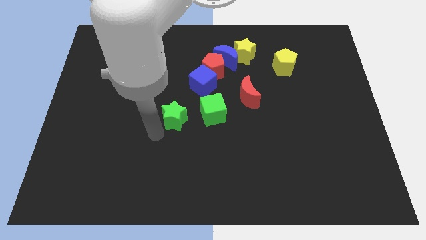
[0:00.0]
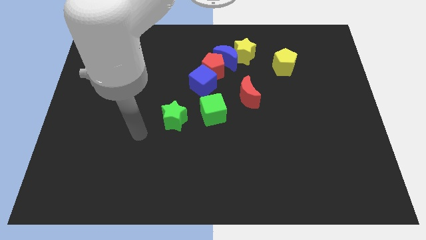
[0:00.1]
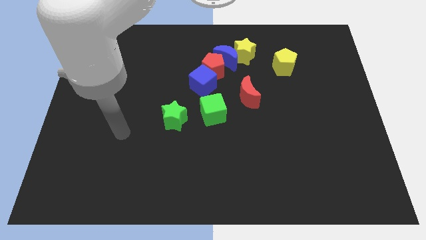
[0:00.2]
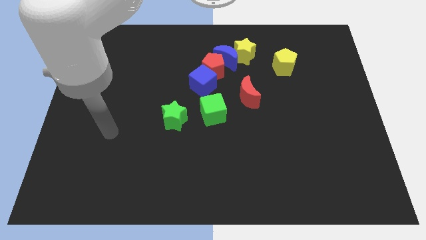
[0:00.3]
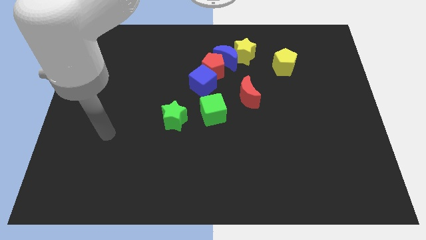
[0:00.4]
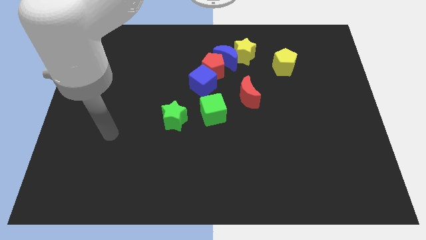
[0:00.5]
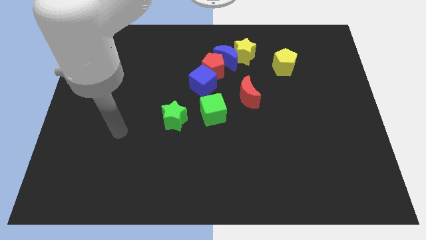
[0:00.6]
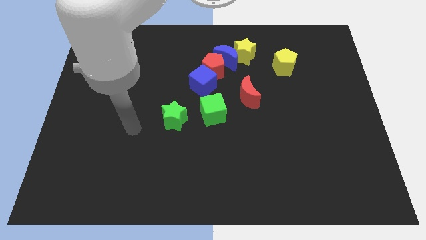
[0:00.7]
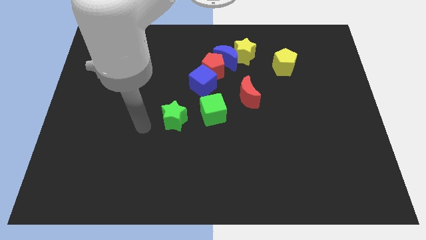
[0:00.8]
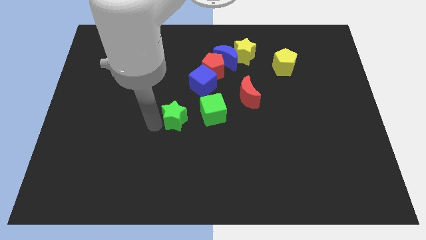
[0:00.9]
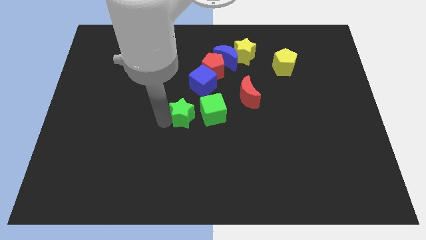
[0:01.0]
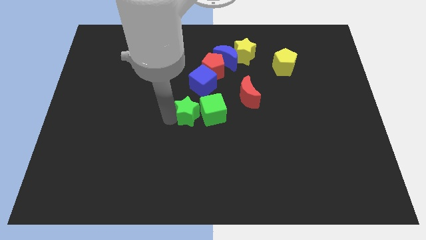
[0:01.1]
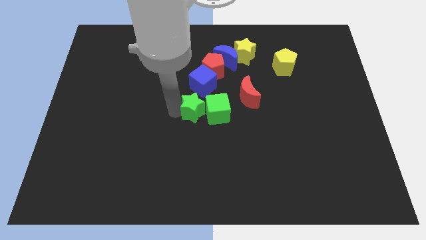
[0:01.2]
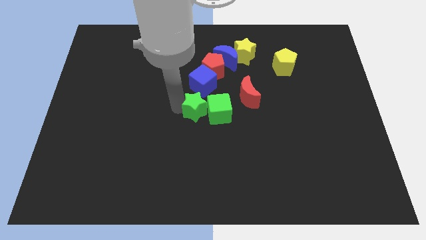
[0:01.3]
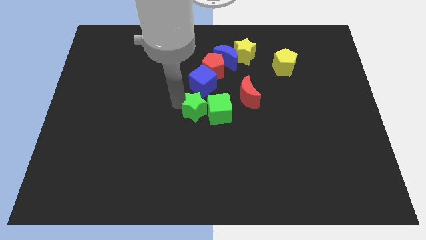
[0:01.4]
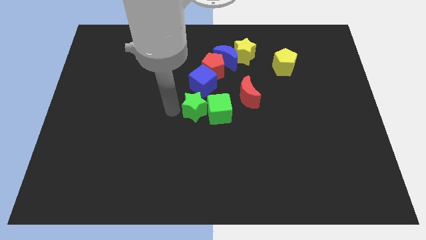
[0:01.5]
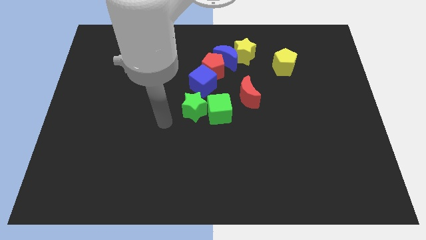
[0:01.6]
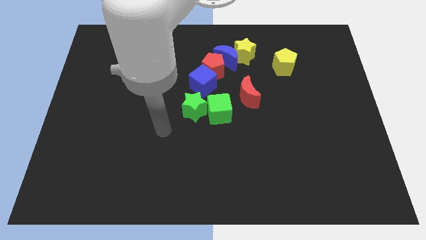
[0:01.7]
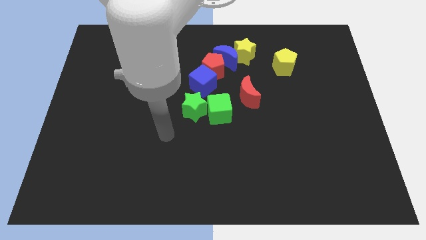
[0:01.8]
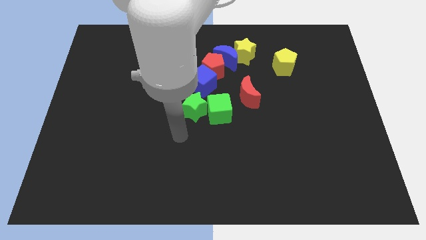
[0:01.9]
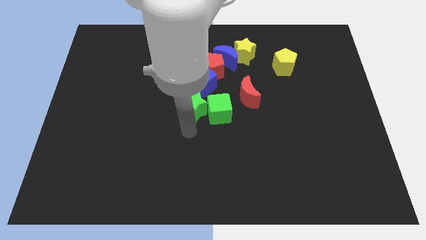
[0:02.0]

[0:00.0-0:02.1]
move green star close to green cube

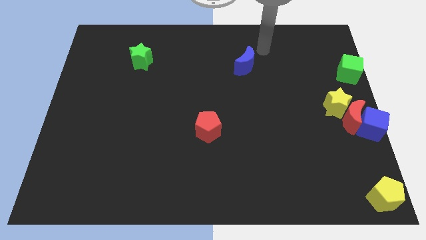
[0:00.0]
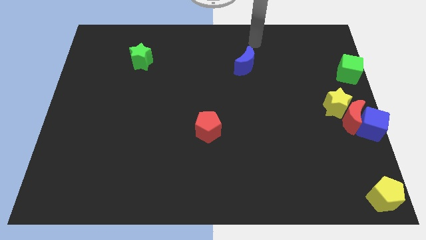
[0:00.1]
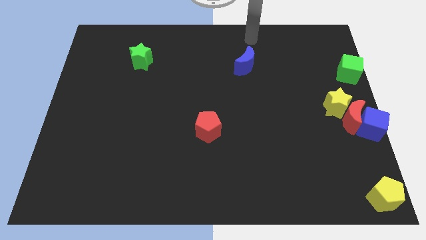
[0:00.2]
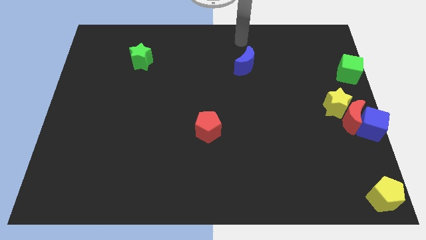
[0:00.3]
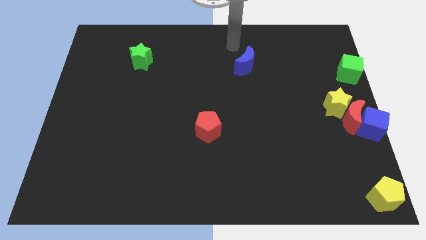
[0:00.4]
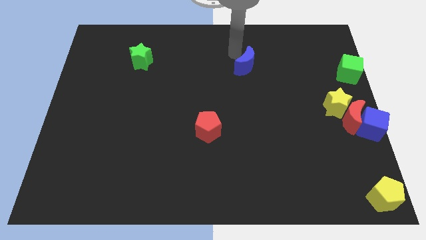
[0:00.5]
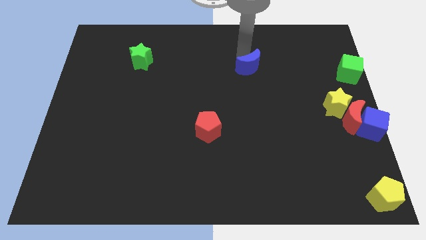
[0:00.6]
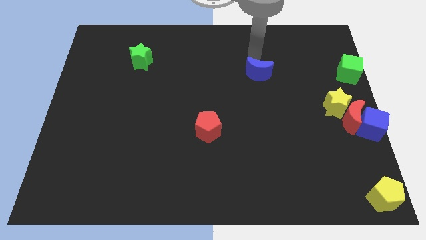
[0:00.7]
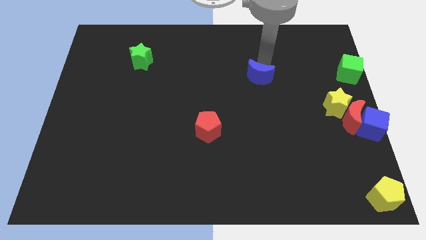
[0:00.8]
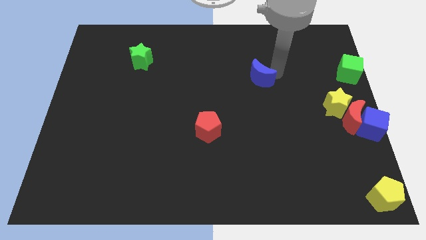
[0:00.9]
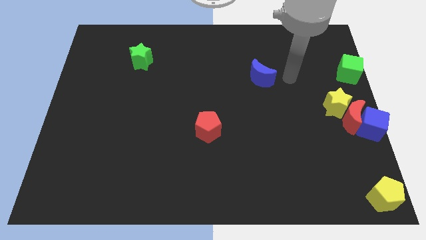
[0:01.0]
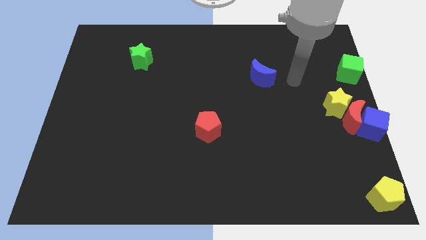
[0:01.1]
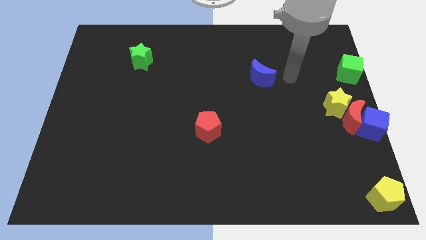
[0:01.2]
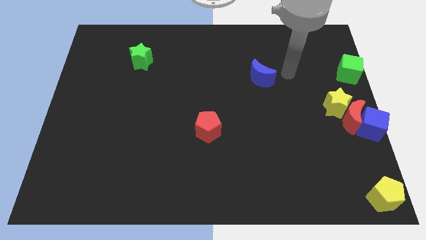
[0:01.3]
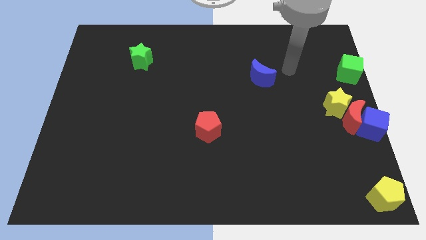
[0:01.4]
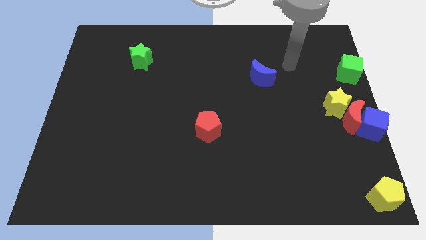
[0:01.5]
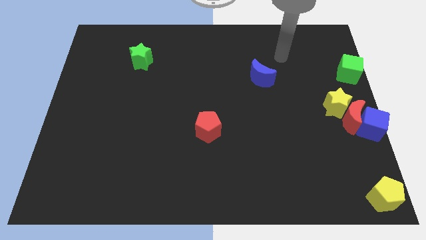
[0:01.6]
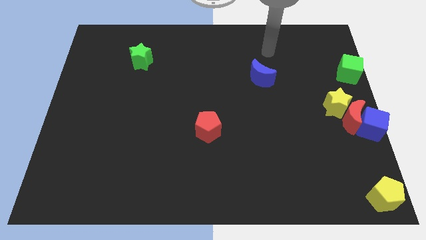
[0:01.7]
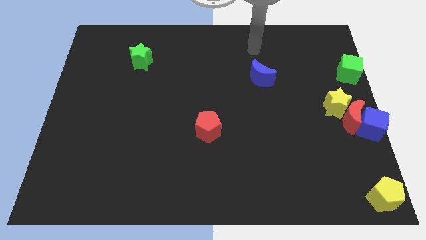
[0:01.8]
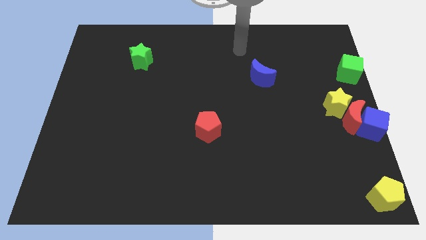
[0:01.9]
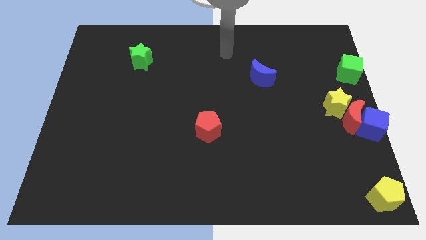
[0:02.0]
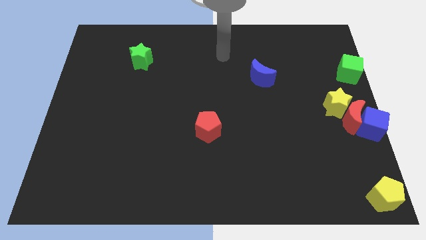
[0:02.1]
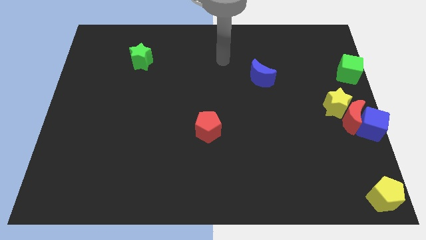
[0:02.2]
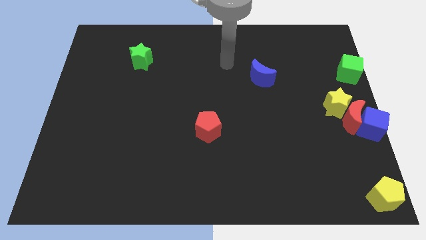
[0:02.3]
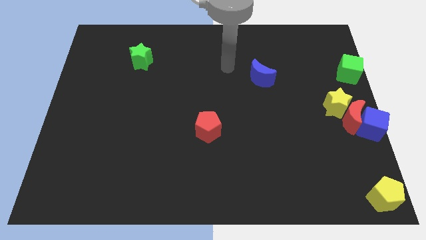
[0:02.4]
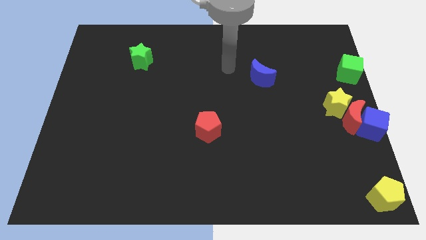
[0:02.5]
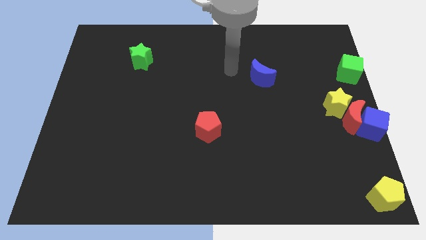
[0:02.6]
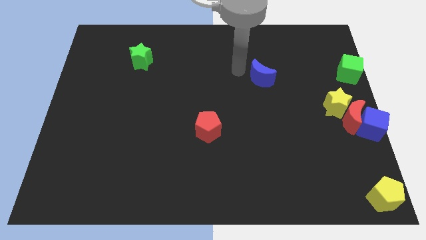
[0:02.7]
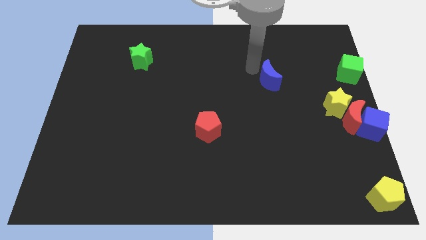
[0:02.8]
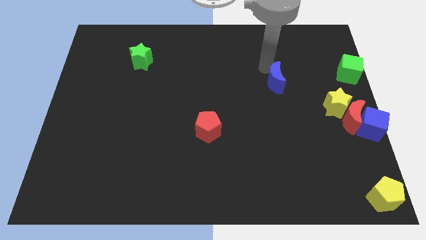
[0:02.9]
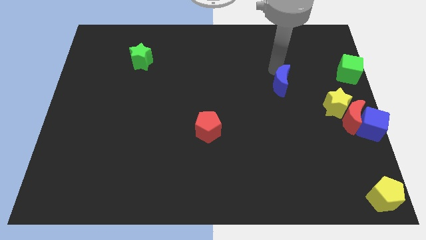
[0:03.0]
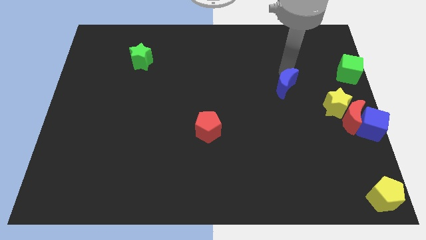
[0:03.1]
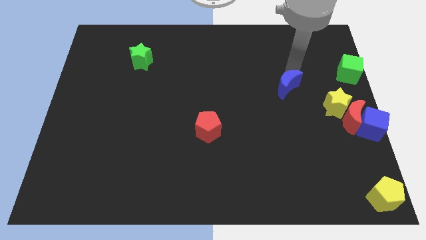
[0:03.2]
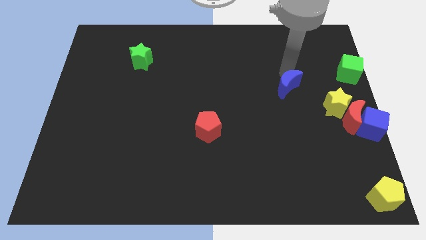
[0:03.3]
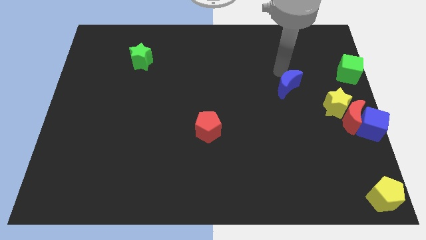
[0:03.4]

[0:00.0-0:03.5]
move the blue crescent diagonal to the yellow star

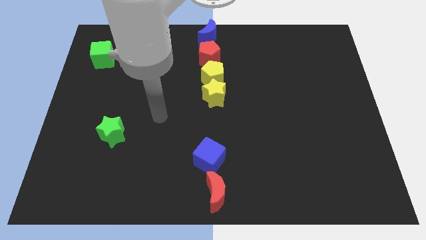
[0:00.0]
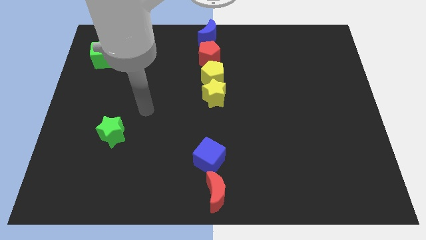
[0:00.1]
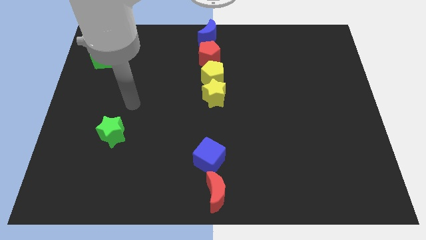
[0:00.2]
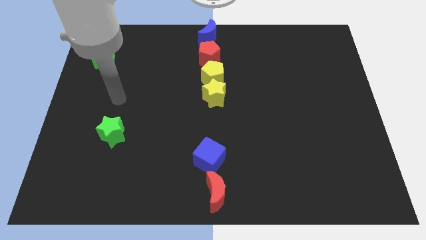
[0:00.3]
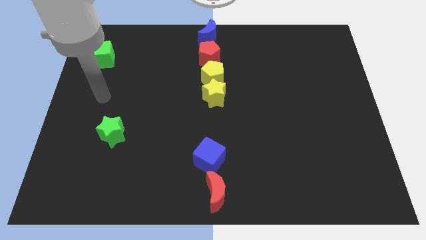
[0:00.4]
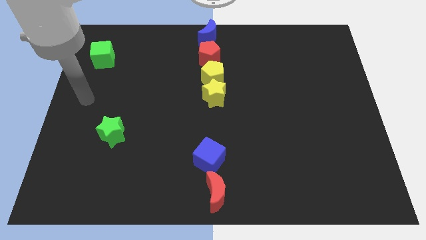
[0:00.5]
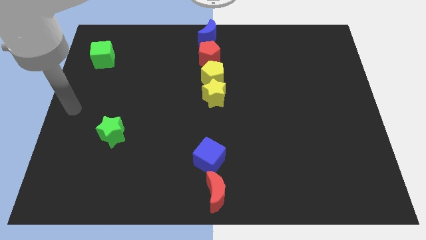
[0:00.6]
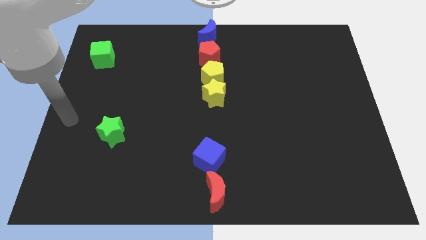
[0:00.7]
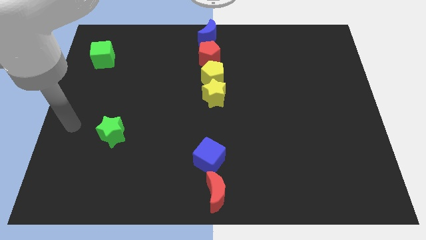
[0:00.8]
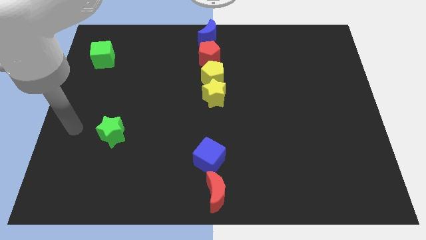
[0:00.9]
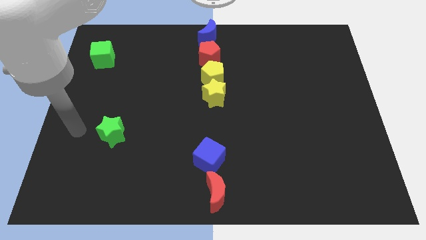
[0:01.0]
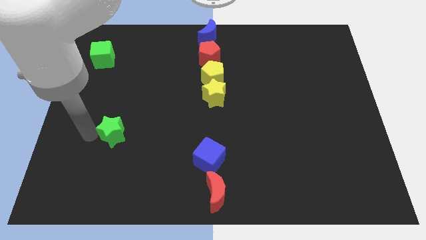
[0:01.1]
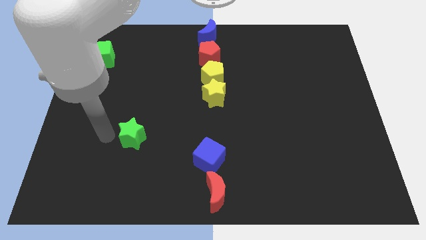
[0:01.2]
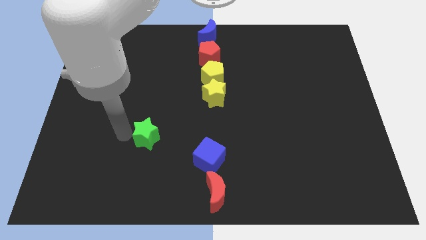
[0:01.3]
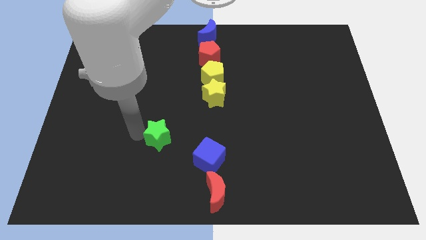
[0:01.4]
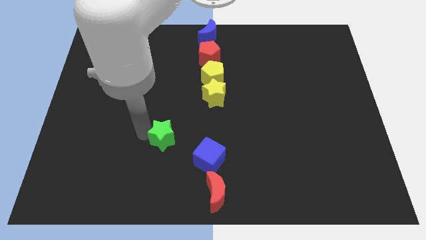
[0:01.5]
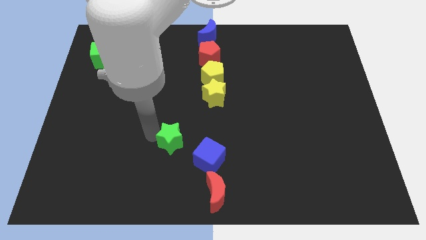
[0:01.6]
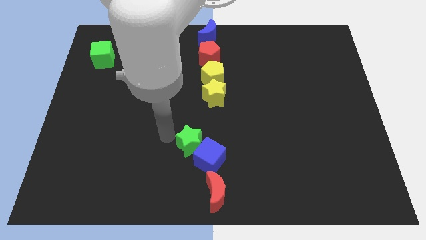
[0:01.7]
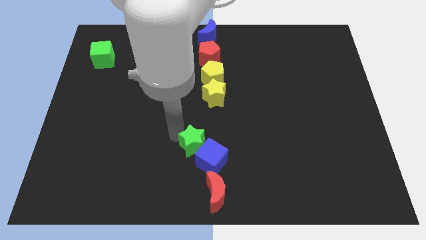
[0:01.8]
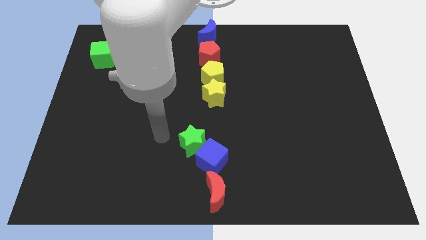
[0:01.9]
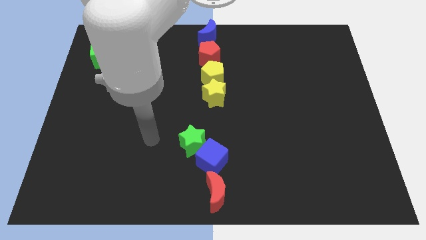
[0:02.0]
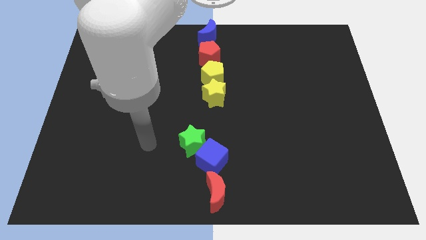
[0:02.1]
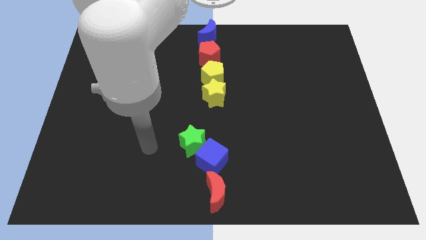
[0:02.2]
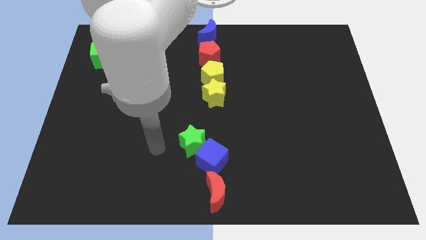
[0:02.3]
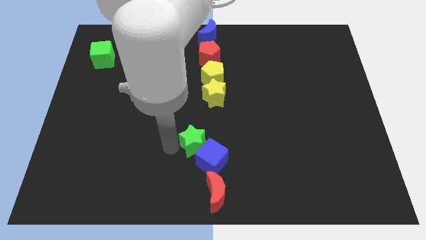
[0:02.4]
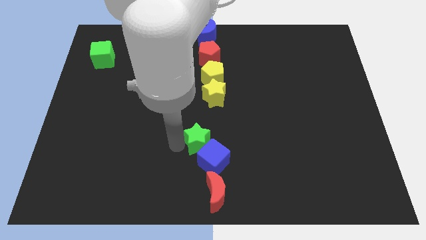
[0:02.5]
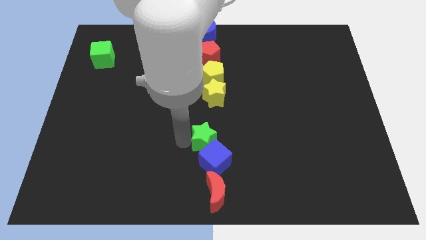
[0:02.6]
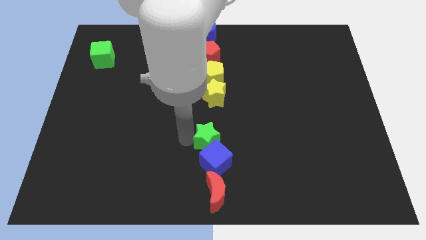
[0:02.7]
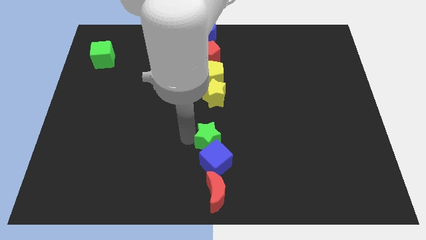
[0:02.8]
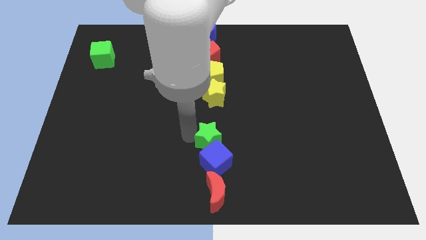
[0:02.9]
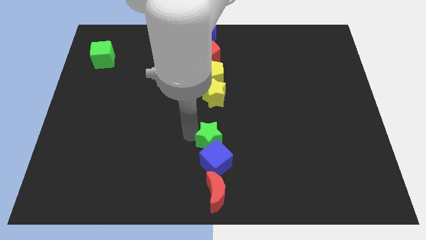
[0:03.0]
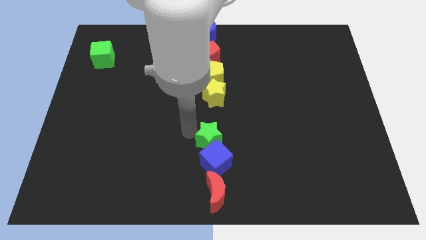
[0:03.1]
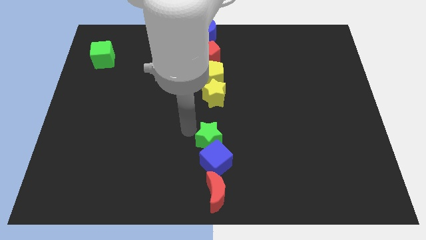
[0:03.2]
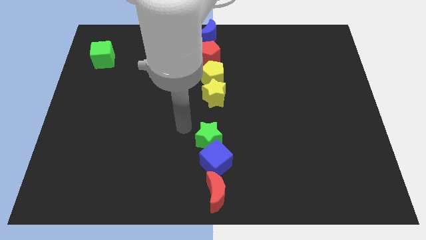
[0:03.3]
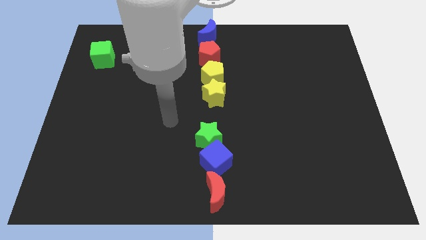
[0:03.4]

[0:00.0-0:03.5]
slide the green star to the top of the blue cube
